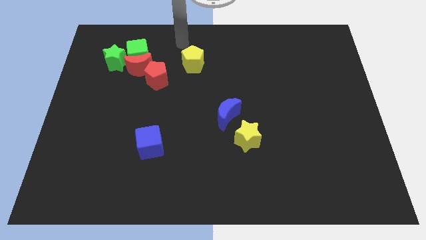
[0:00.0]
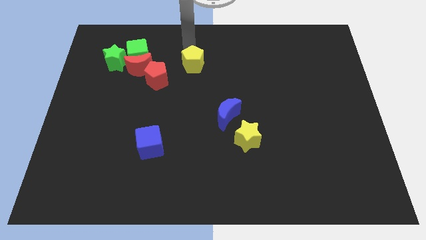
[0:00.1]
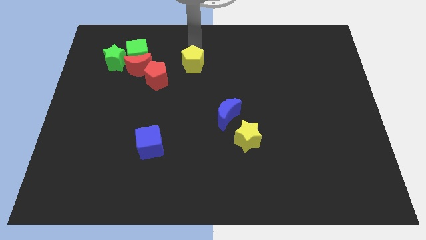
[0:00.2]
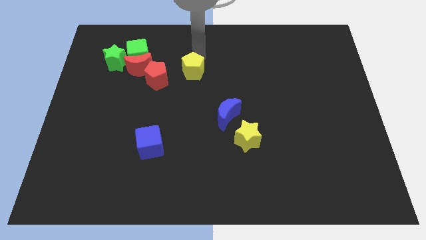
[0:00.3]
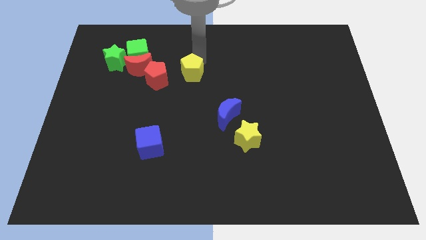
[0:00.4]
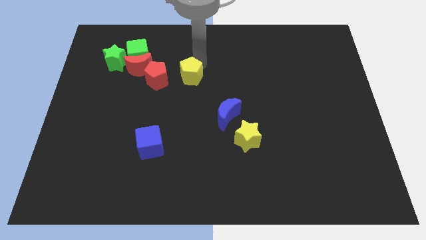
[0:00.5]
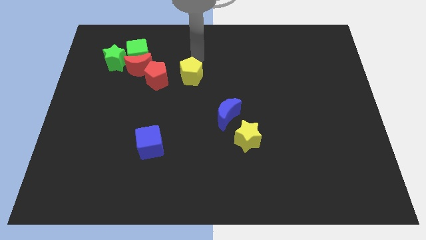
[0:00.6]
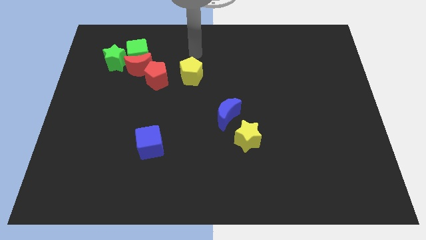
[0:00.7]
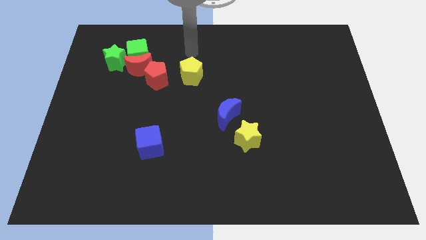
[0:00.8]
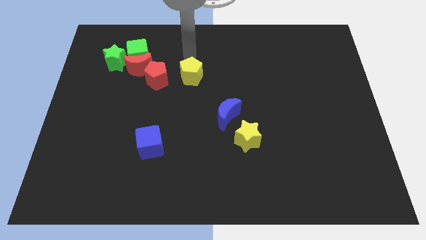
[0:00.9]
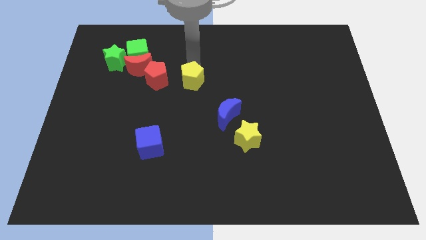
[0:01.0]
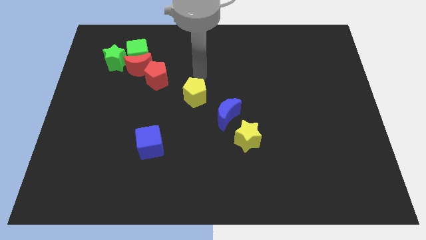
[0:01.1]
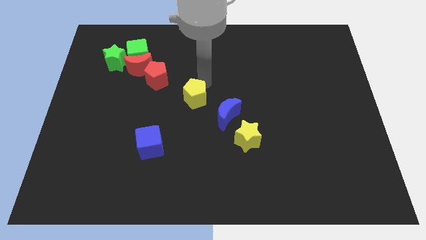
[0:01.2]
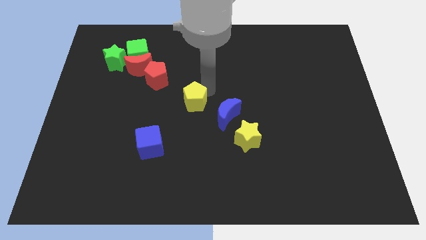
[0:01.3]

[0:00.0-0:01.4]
move yellow pentagon at the center of the board

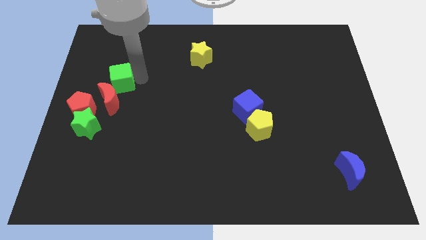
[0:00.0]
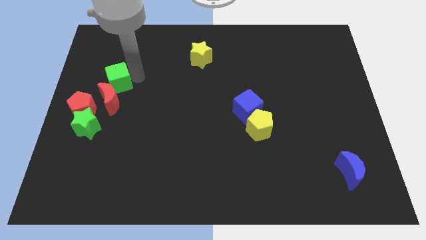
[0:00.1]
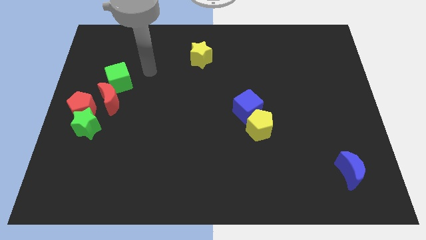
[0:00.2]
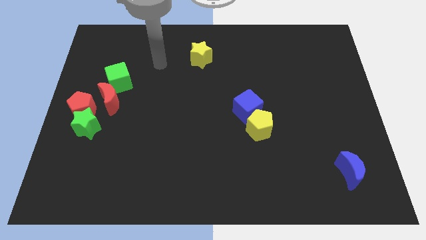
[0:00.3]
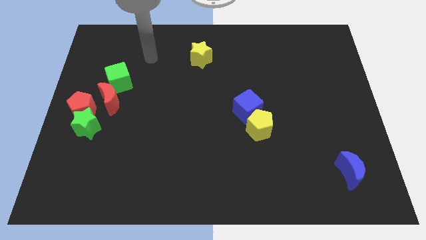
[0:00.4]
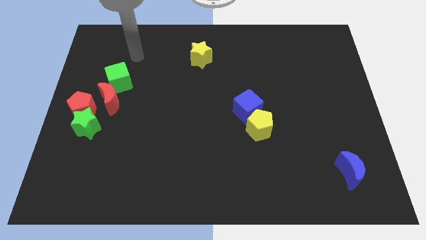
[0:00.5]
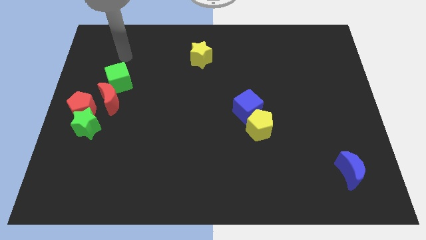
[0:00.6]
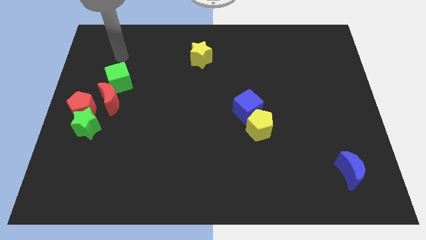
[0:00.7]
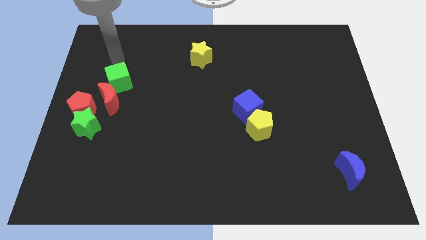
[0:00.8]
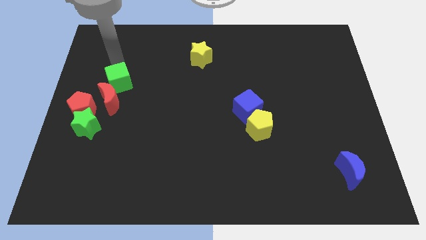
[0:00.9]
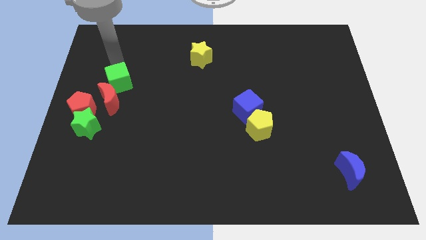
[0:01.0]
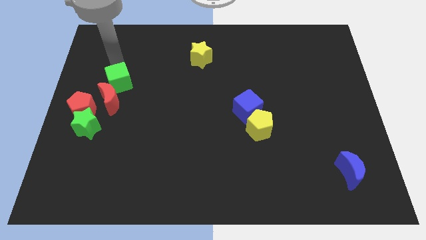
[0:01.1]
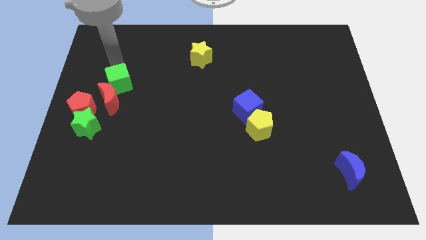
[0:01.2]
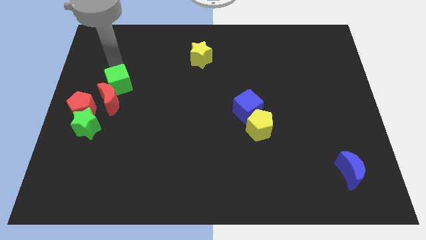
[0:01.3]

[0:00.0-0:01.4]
move the green cube into the red moon

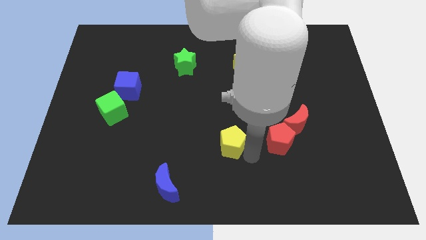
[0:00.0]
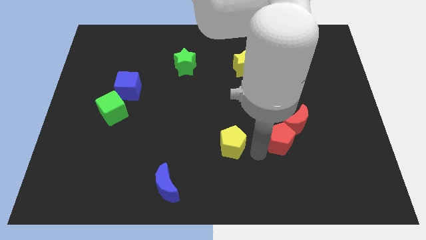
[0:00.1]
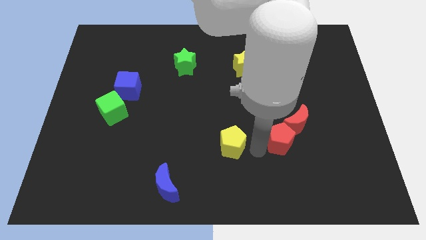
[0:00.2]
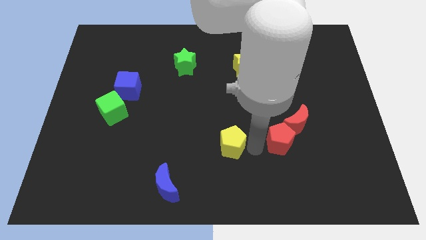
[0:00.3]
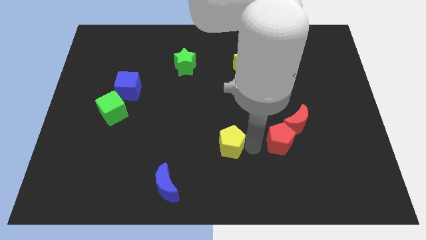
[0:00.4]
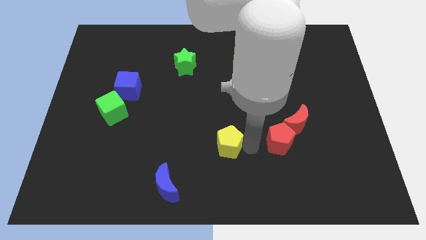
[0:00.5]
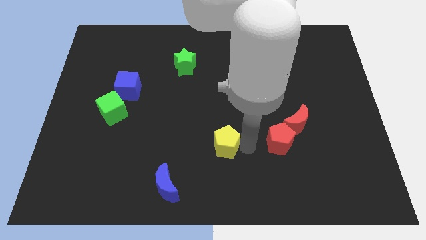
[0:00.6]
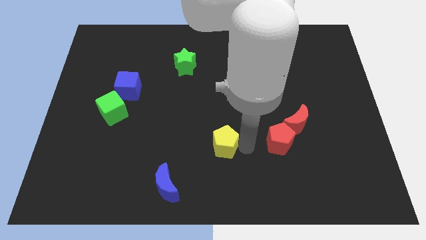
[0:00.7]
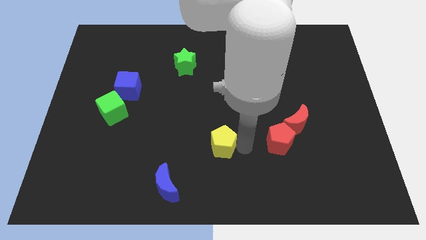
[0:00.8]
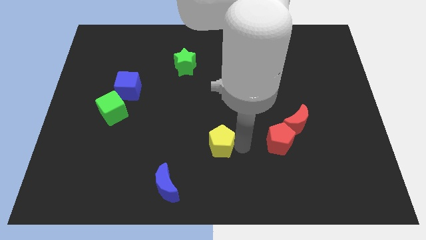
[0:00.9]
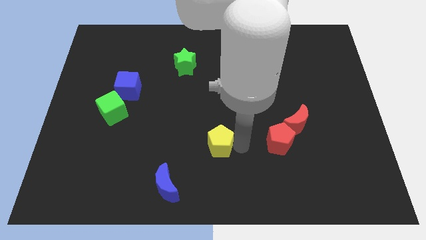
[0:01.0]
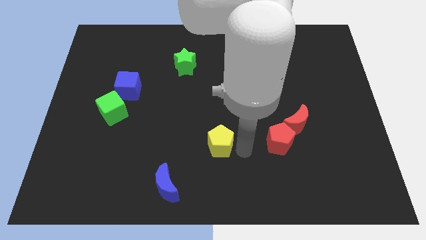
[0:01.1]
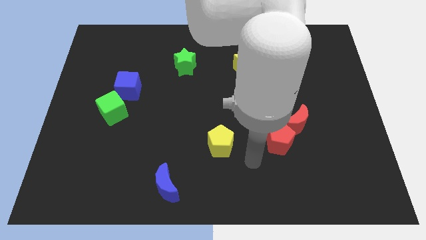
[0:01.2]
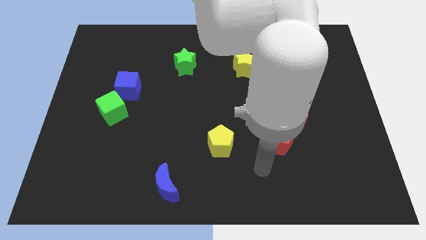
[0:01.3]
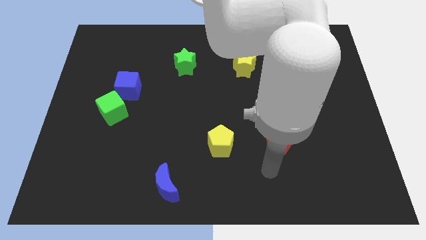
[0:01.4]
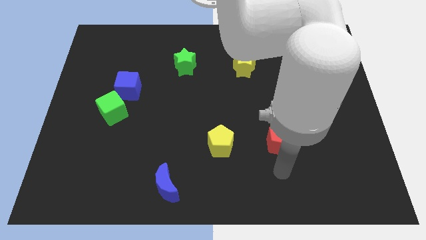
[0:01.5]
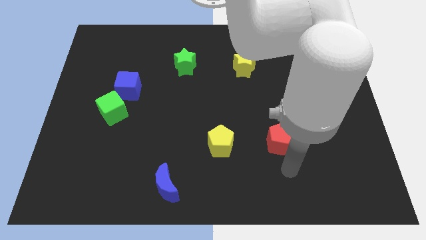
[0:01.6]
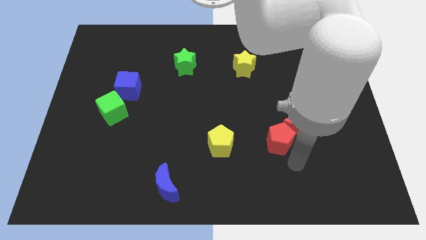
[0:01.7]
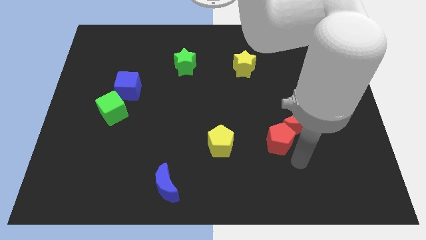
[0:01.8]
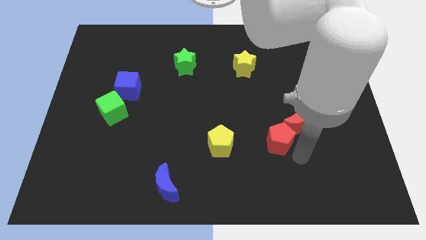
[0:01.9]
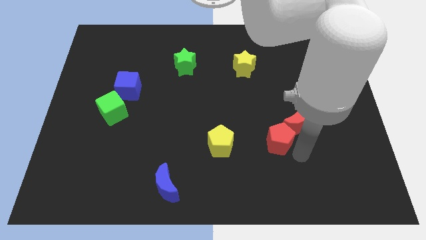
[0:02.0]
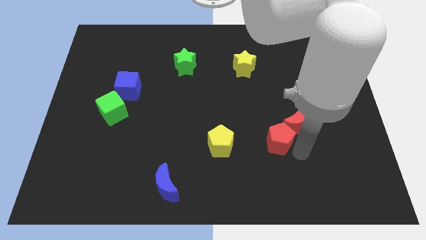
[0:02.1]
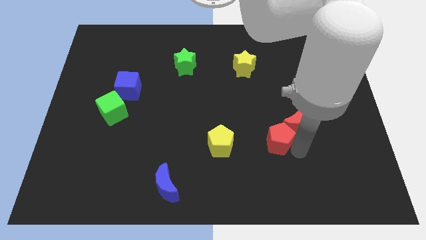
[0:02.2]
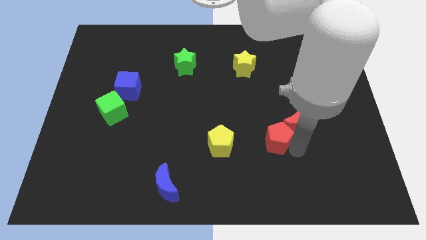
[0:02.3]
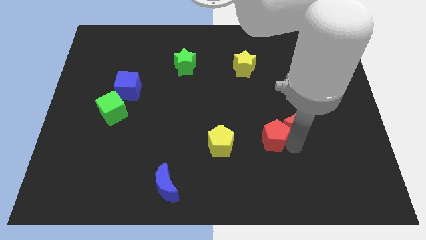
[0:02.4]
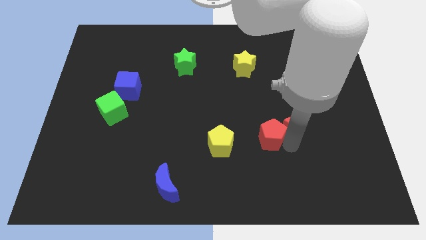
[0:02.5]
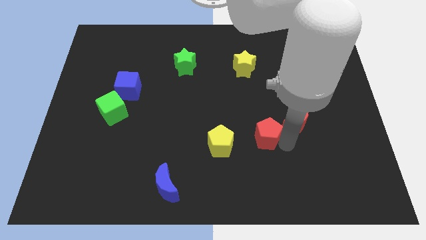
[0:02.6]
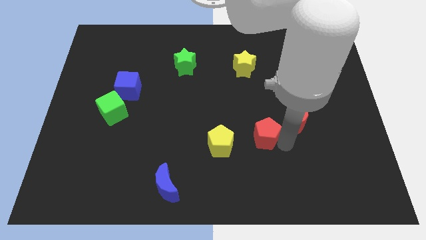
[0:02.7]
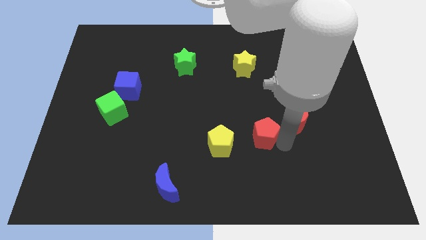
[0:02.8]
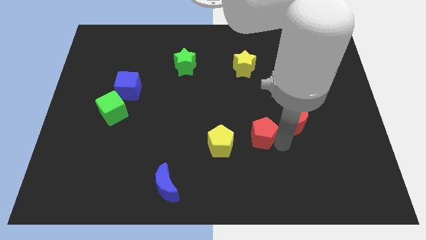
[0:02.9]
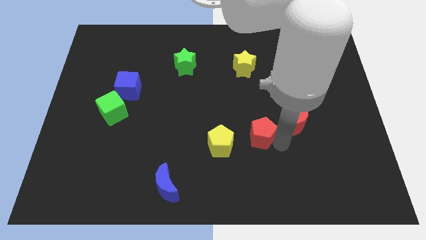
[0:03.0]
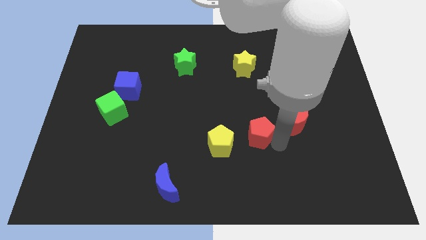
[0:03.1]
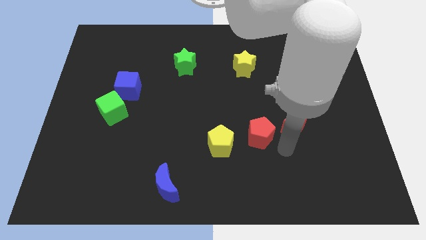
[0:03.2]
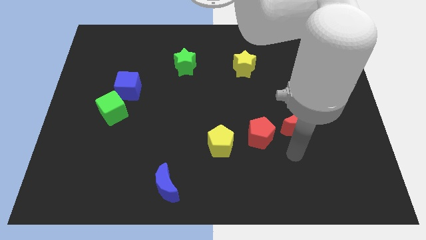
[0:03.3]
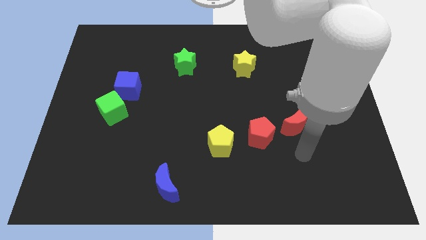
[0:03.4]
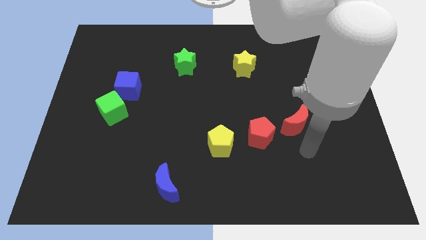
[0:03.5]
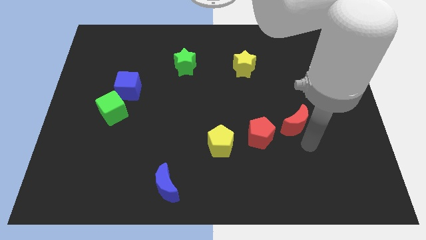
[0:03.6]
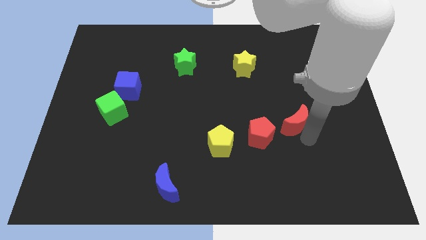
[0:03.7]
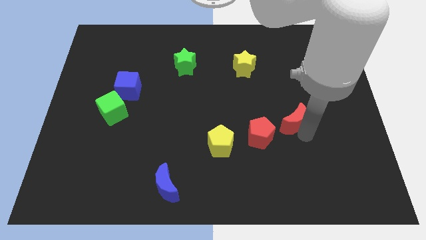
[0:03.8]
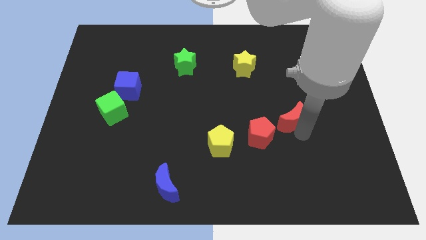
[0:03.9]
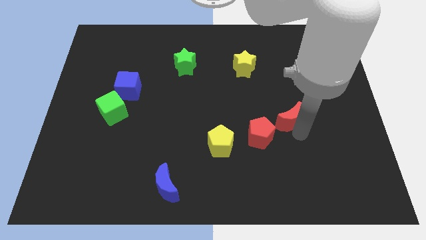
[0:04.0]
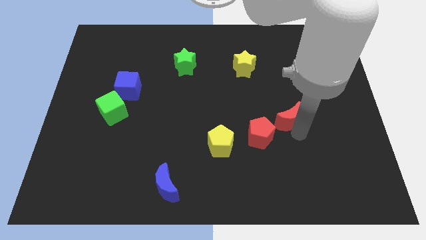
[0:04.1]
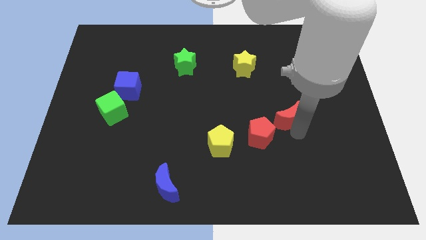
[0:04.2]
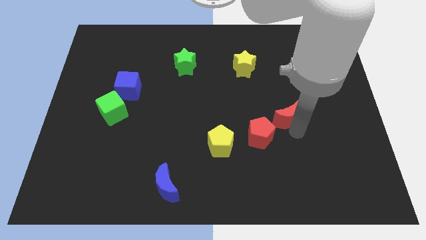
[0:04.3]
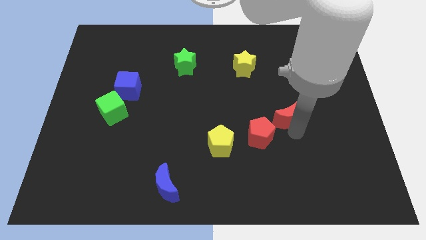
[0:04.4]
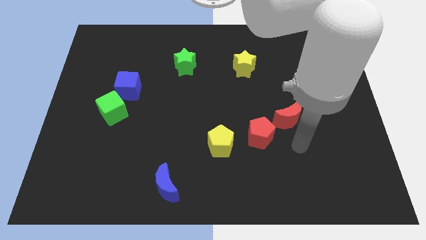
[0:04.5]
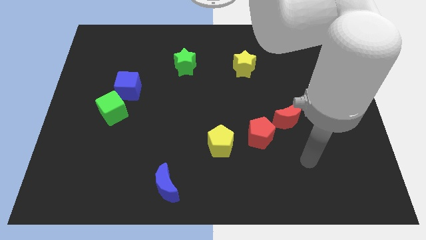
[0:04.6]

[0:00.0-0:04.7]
adjust the yellow pentagon red pentagon and red crescent in a diagonal line

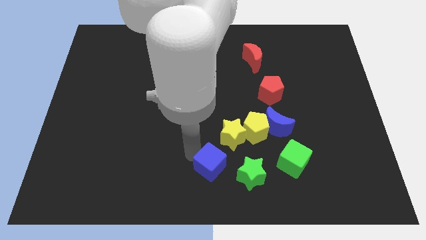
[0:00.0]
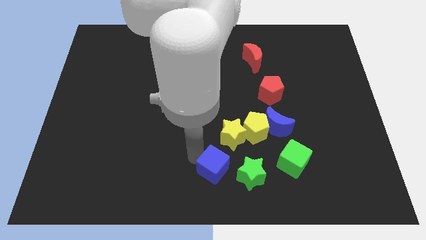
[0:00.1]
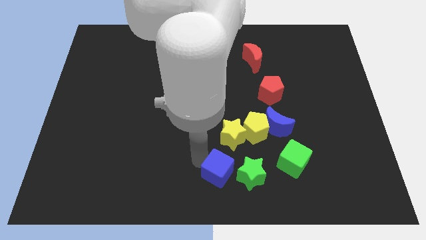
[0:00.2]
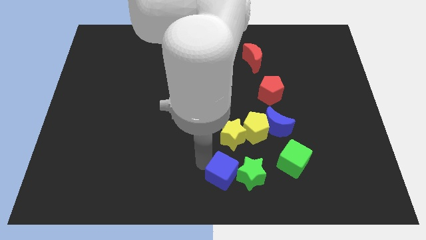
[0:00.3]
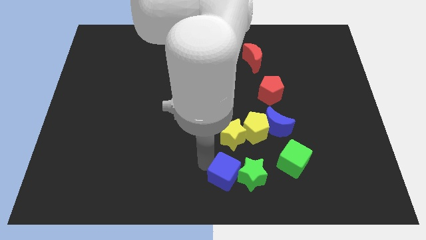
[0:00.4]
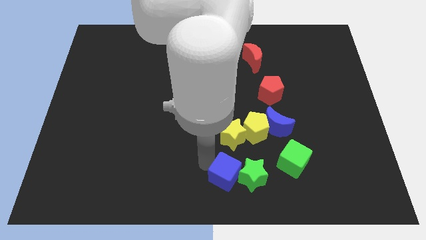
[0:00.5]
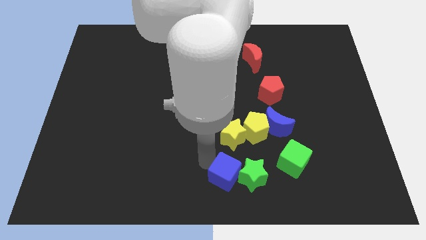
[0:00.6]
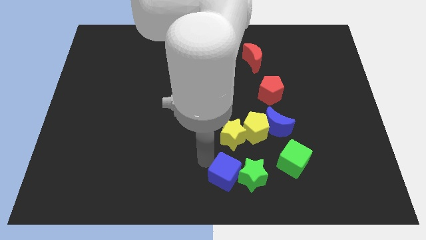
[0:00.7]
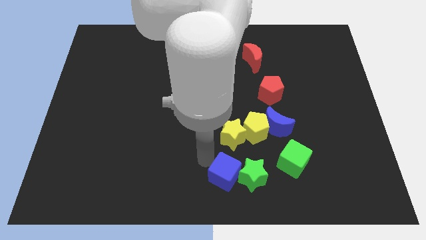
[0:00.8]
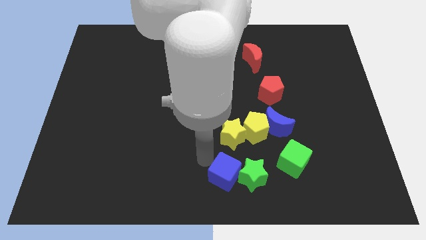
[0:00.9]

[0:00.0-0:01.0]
move the blue cube into the green star

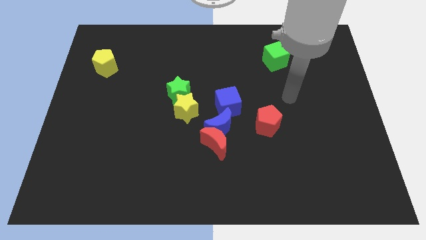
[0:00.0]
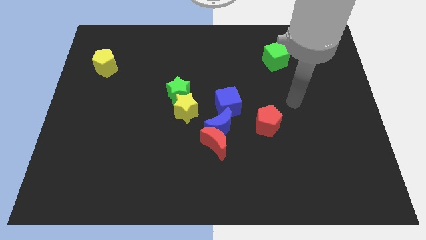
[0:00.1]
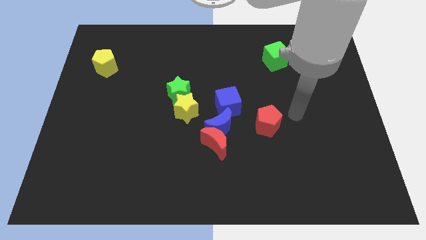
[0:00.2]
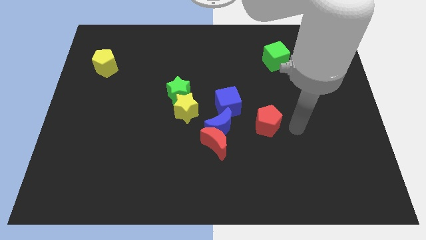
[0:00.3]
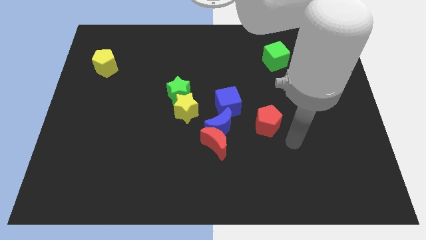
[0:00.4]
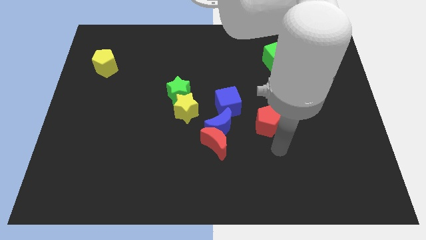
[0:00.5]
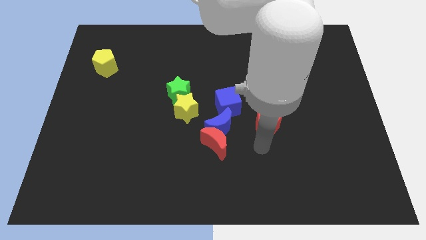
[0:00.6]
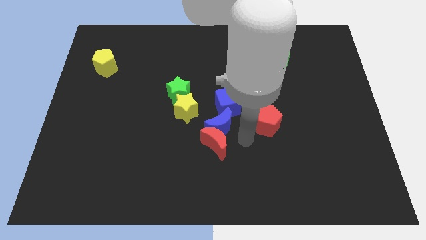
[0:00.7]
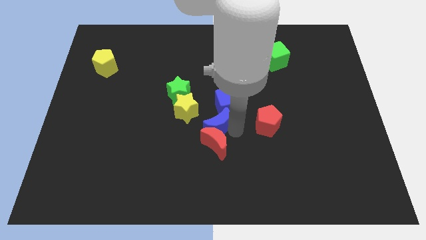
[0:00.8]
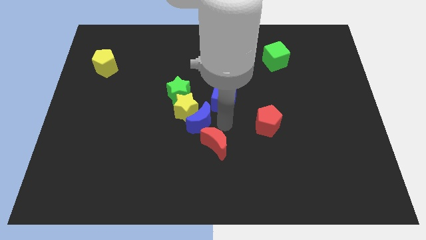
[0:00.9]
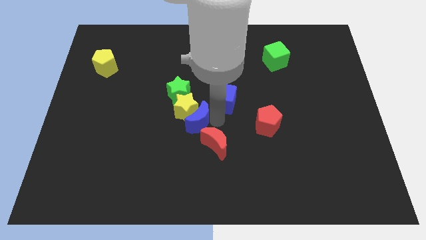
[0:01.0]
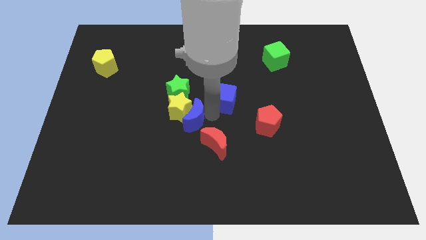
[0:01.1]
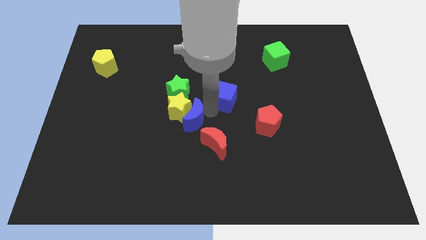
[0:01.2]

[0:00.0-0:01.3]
touch the blue blocks
